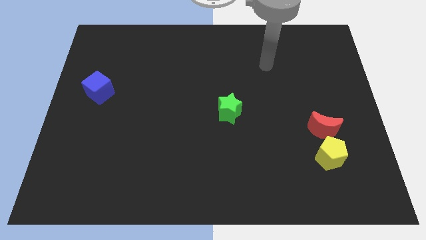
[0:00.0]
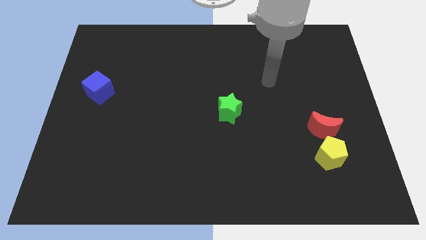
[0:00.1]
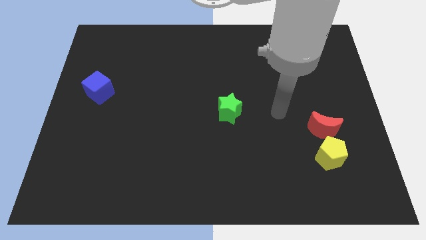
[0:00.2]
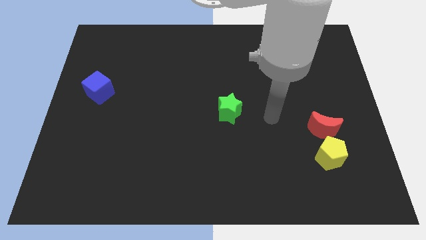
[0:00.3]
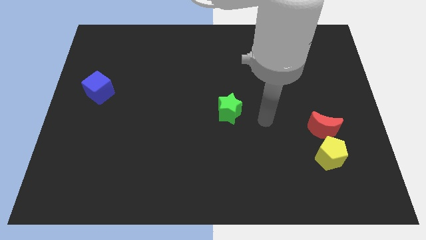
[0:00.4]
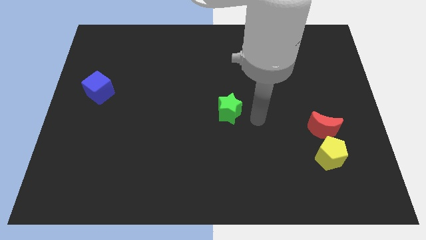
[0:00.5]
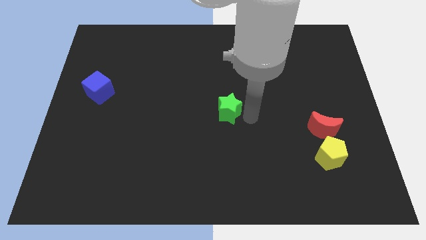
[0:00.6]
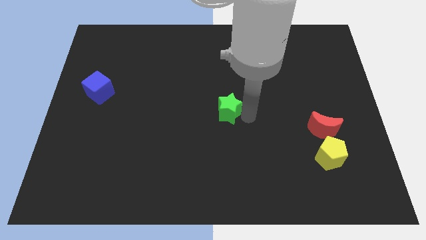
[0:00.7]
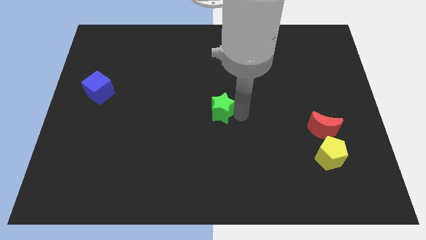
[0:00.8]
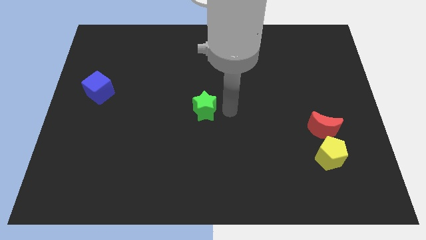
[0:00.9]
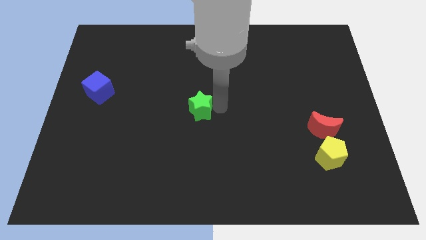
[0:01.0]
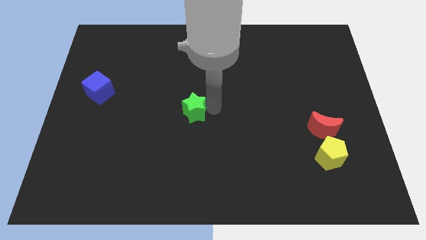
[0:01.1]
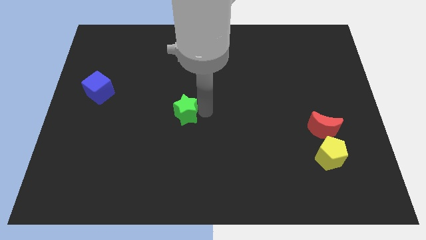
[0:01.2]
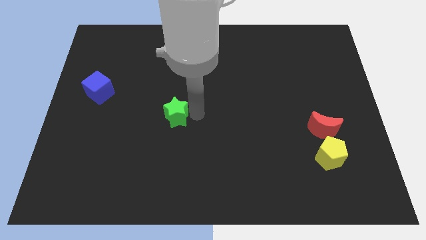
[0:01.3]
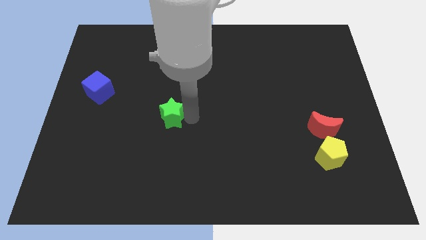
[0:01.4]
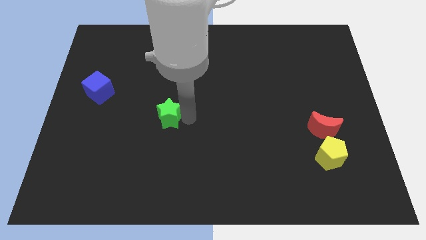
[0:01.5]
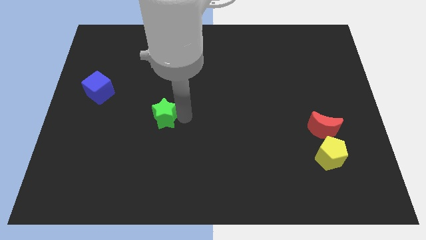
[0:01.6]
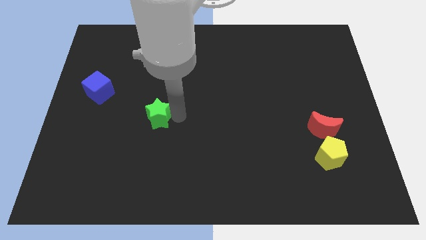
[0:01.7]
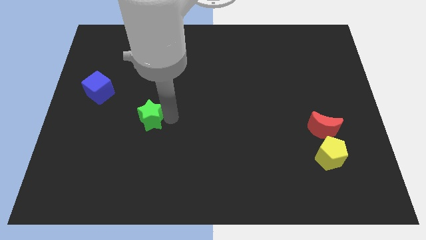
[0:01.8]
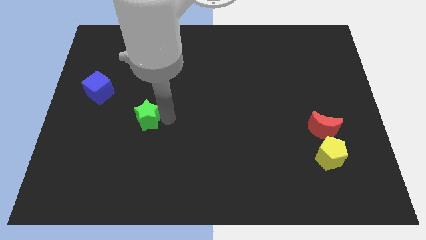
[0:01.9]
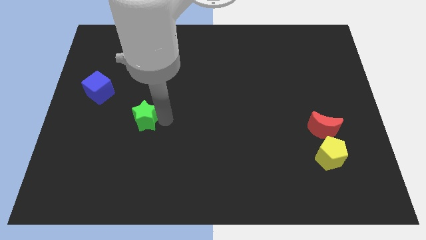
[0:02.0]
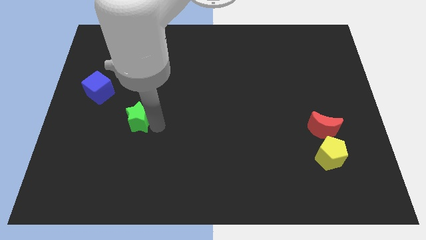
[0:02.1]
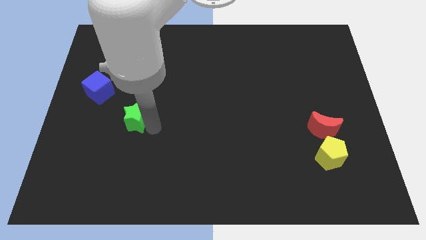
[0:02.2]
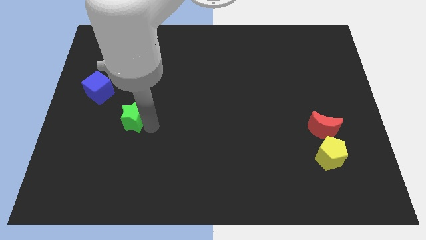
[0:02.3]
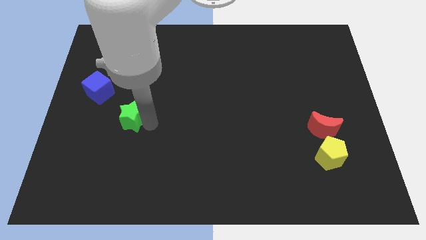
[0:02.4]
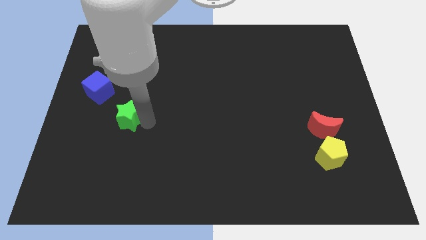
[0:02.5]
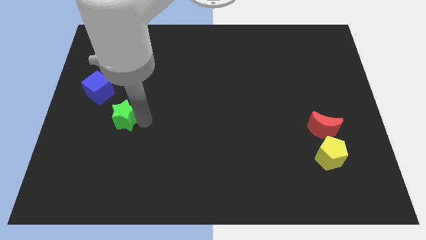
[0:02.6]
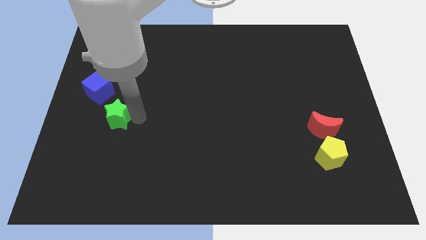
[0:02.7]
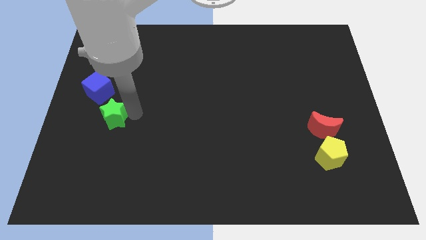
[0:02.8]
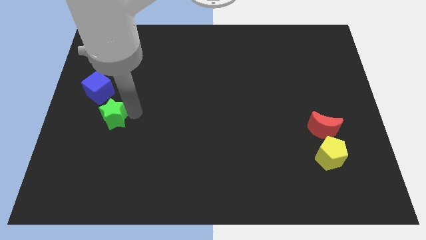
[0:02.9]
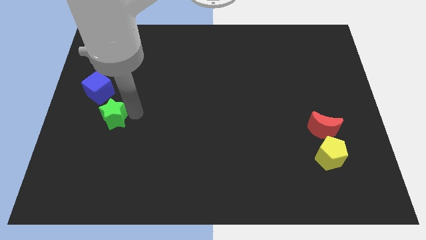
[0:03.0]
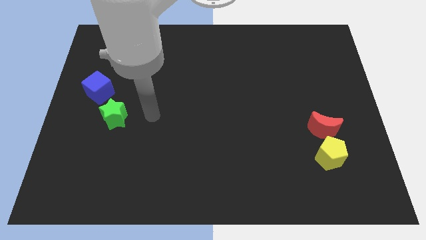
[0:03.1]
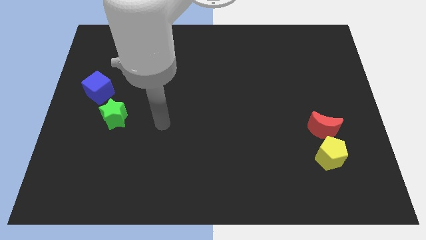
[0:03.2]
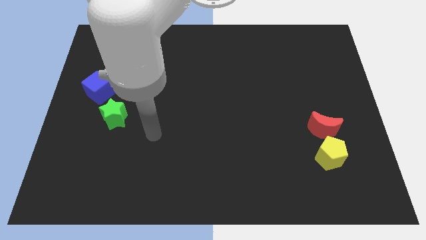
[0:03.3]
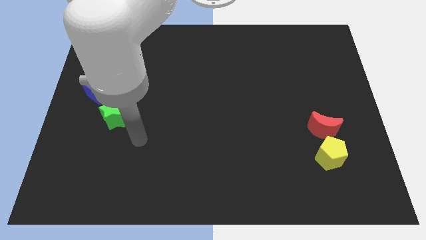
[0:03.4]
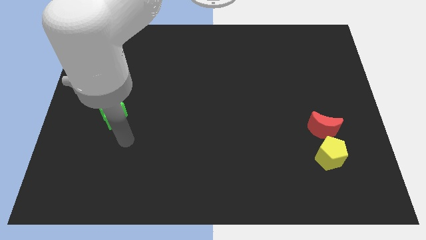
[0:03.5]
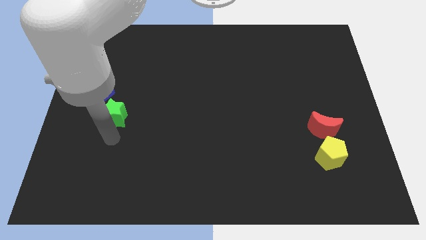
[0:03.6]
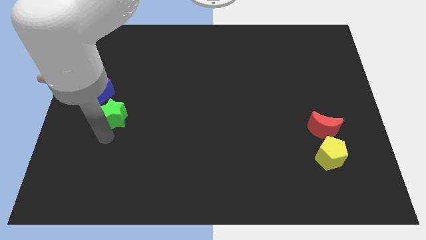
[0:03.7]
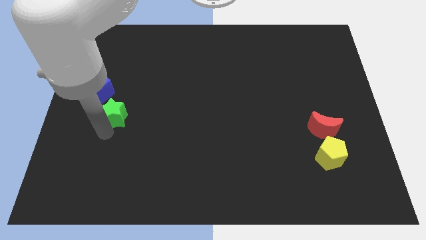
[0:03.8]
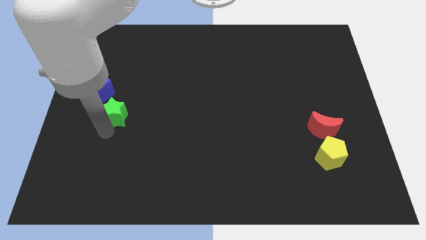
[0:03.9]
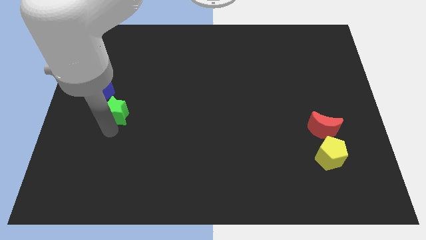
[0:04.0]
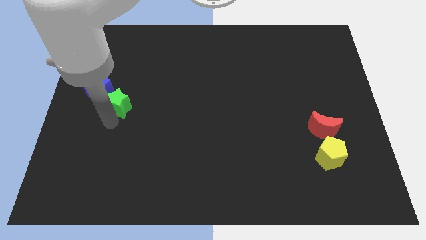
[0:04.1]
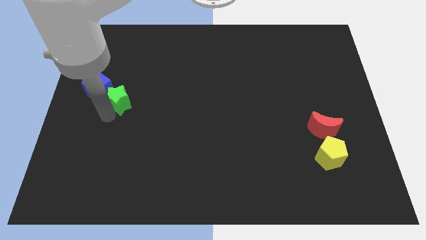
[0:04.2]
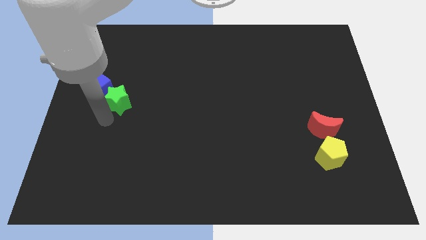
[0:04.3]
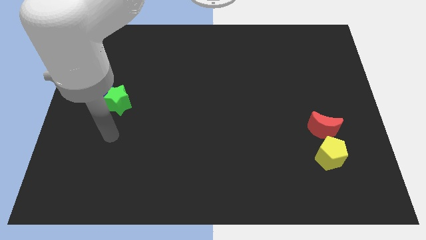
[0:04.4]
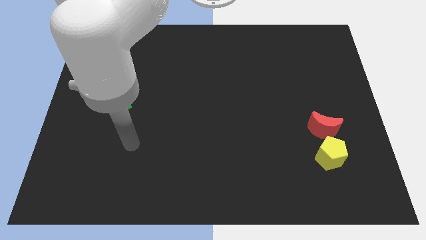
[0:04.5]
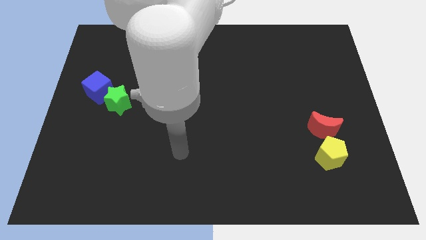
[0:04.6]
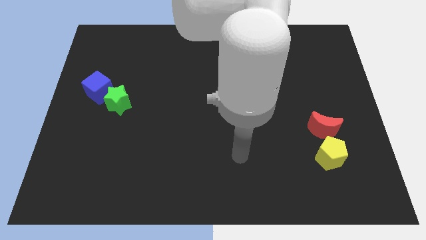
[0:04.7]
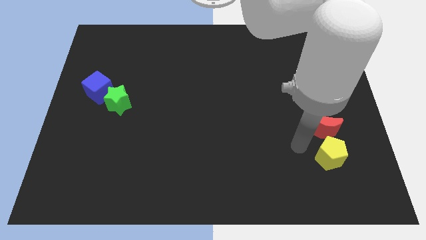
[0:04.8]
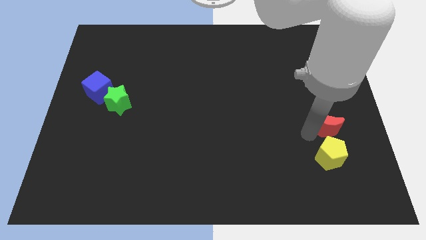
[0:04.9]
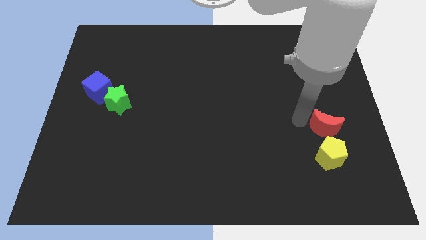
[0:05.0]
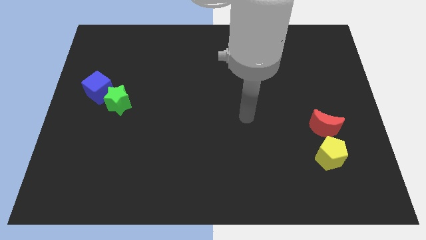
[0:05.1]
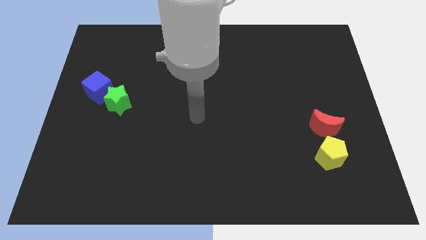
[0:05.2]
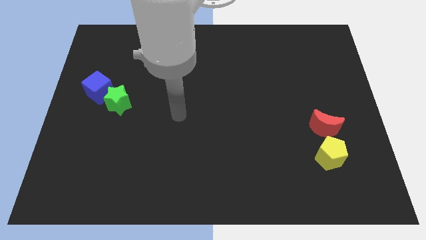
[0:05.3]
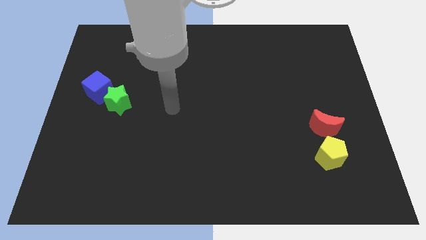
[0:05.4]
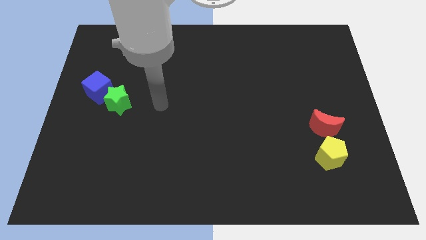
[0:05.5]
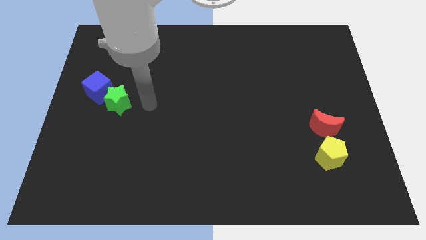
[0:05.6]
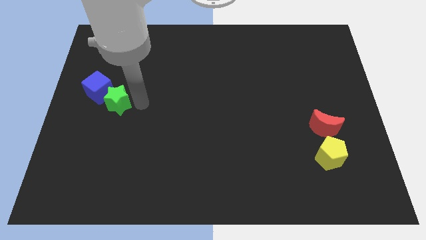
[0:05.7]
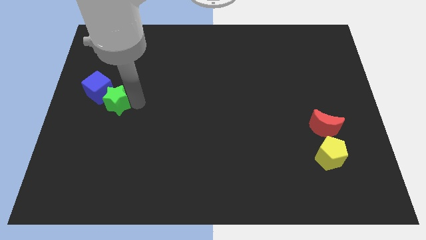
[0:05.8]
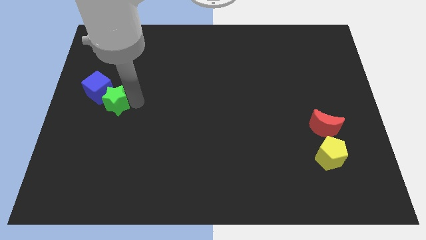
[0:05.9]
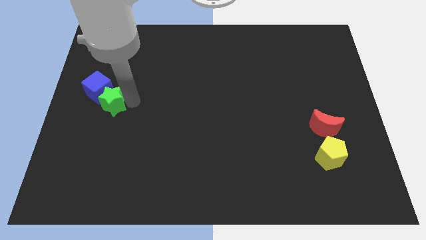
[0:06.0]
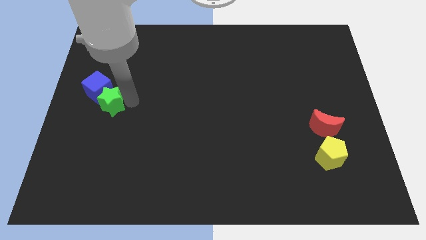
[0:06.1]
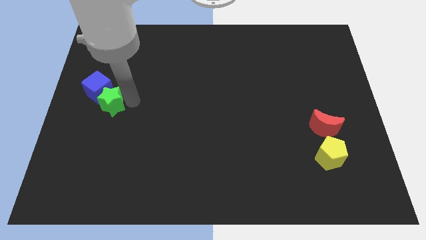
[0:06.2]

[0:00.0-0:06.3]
move the green star towards the blue cube

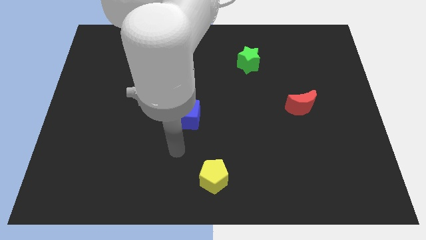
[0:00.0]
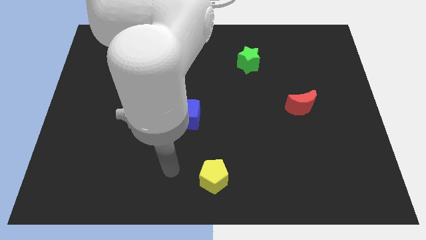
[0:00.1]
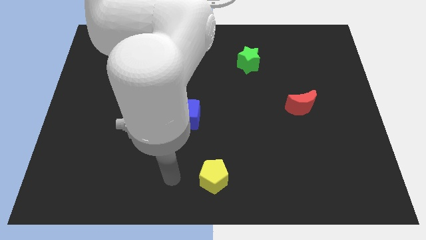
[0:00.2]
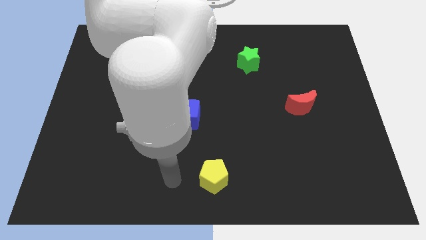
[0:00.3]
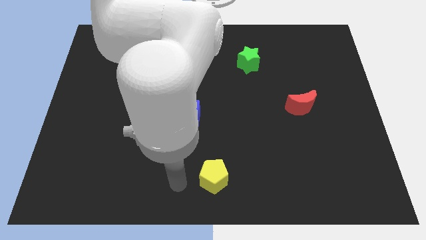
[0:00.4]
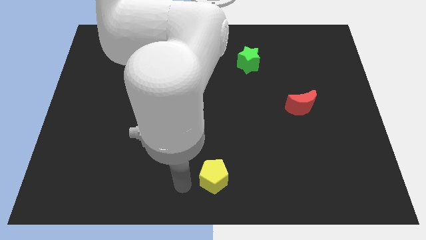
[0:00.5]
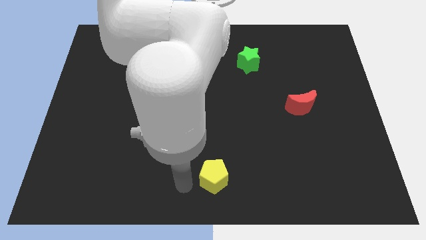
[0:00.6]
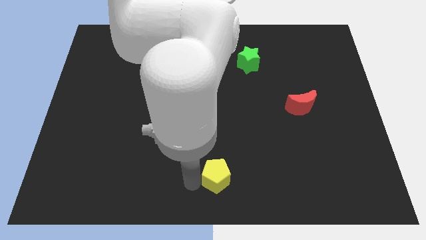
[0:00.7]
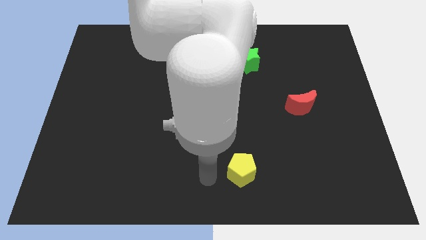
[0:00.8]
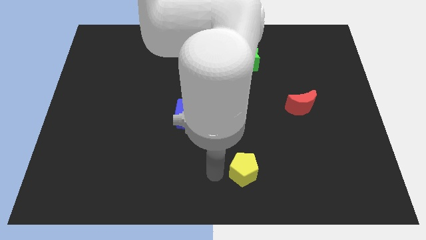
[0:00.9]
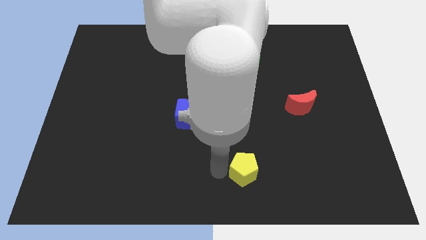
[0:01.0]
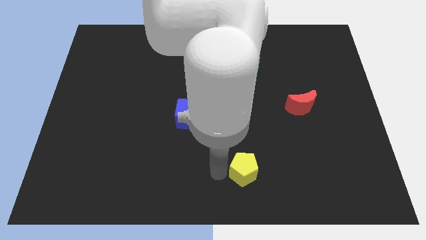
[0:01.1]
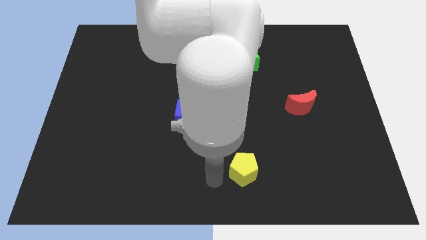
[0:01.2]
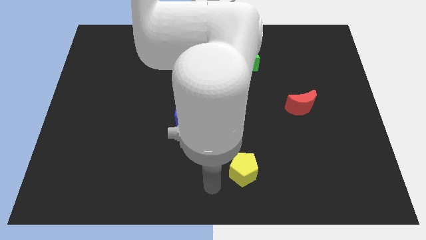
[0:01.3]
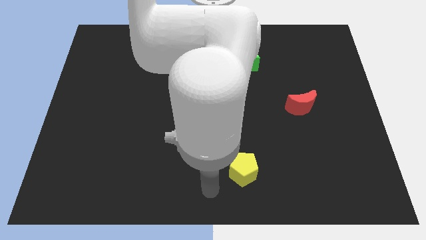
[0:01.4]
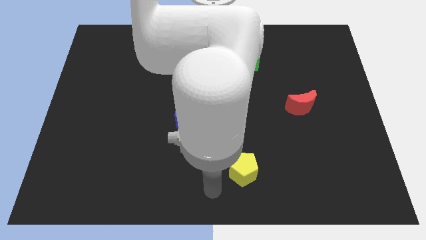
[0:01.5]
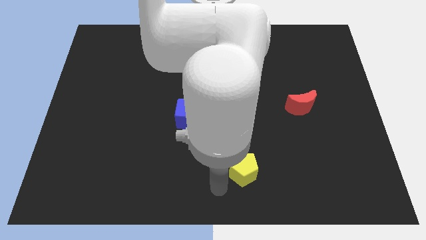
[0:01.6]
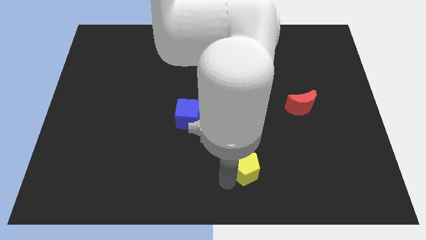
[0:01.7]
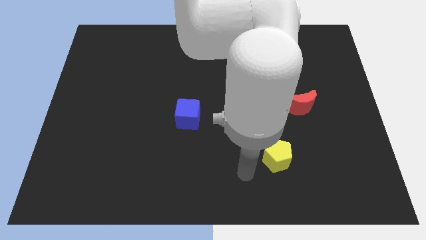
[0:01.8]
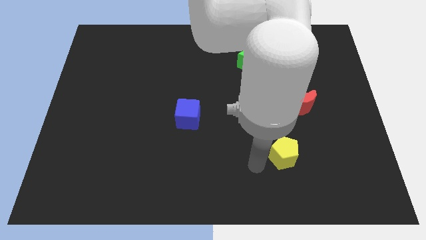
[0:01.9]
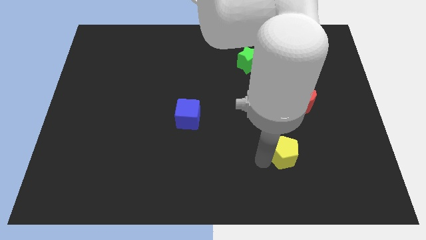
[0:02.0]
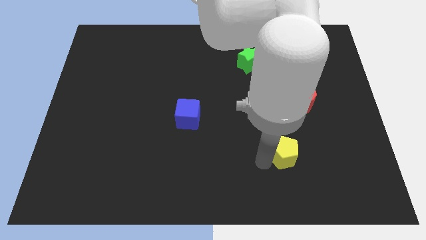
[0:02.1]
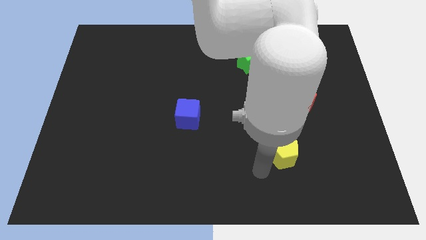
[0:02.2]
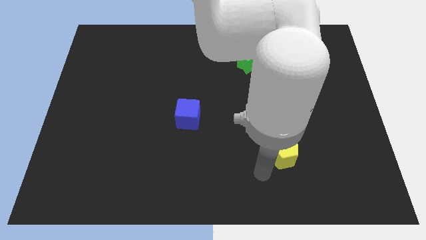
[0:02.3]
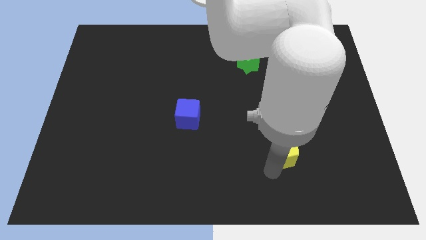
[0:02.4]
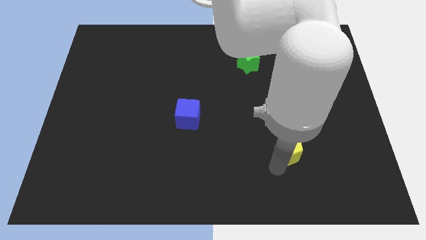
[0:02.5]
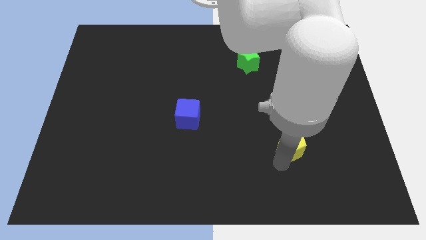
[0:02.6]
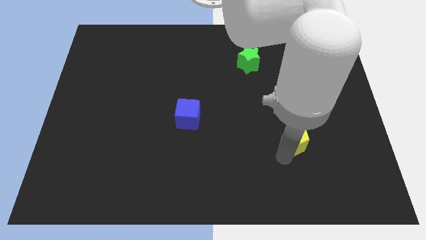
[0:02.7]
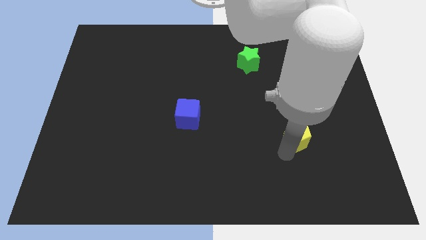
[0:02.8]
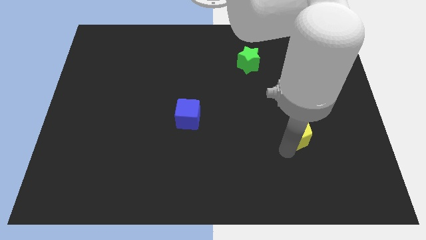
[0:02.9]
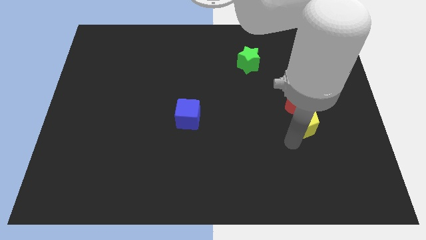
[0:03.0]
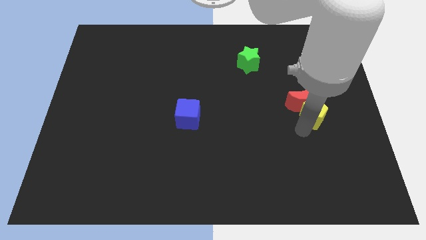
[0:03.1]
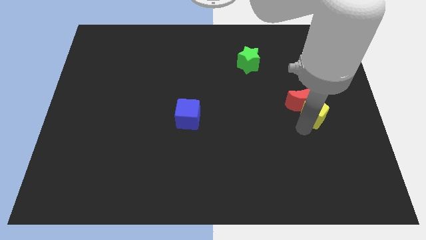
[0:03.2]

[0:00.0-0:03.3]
push the yellow block next to the moon
